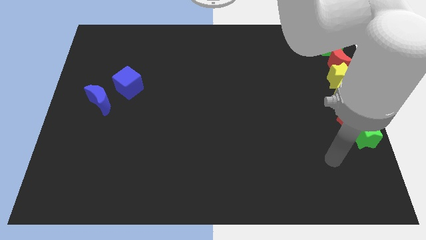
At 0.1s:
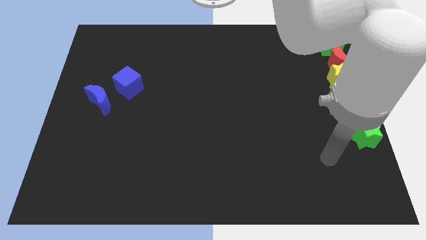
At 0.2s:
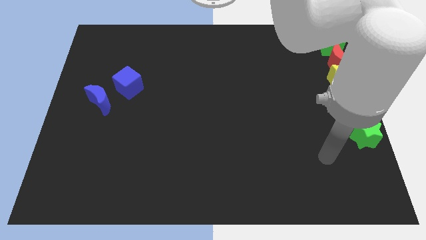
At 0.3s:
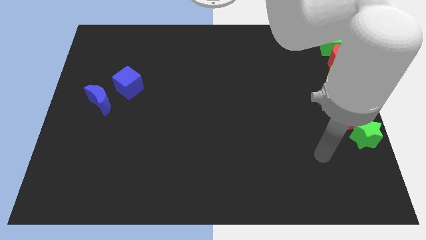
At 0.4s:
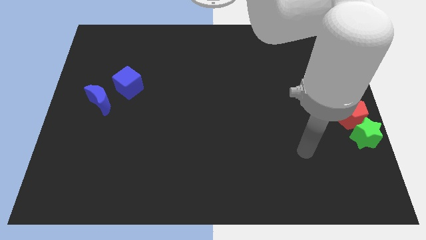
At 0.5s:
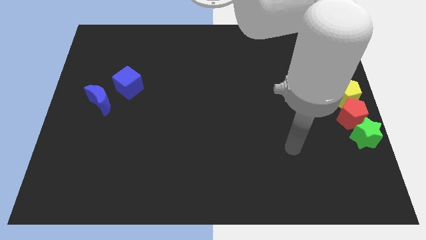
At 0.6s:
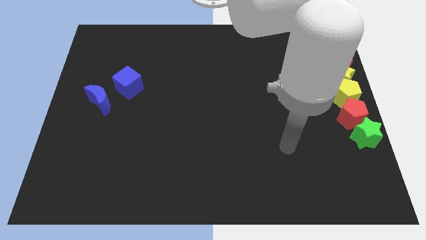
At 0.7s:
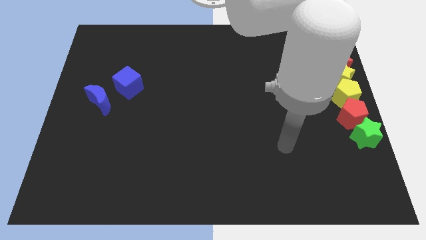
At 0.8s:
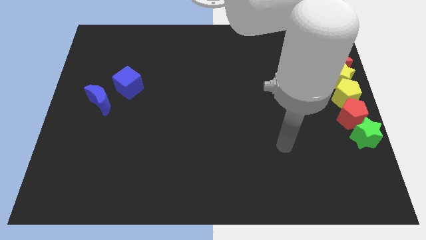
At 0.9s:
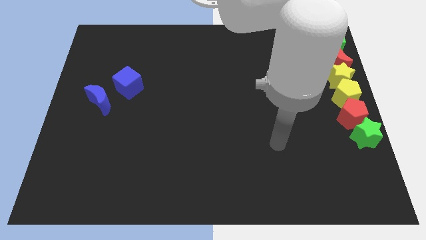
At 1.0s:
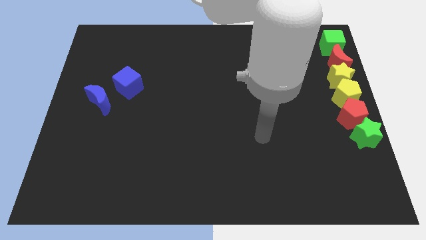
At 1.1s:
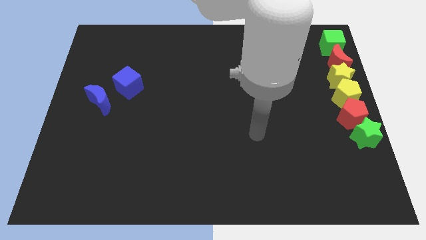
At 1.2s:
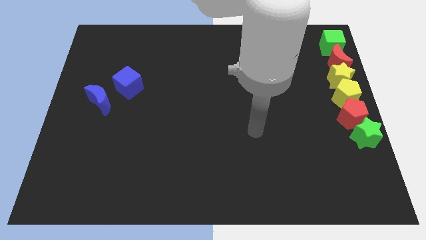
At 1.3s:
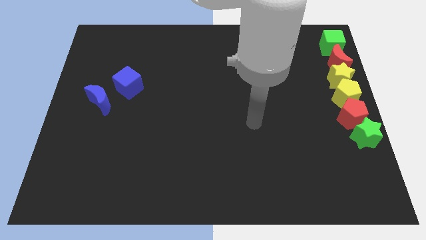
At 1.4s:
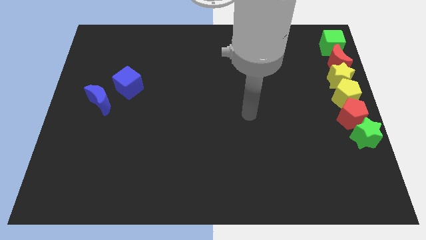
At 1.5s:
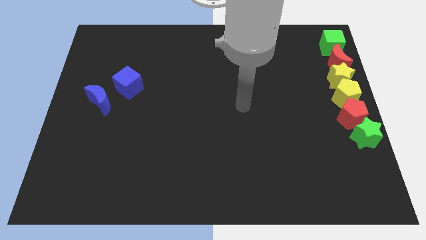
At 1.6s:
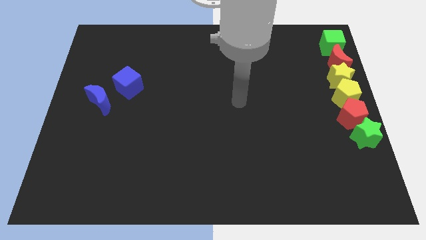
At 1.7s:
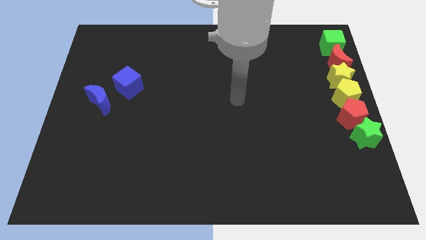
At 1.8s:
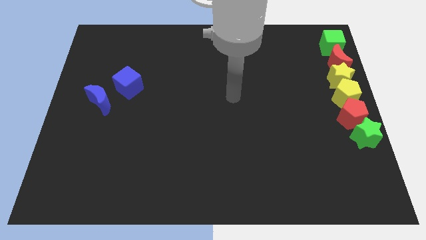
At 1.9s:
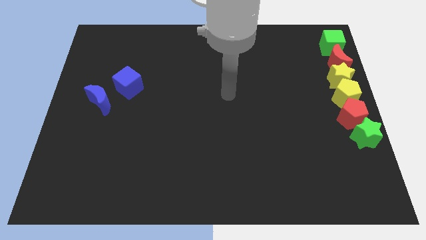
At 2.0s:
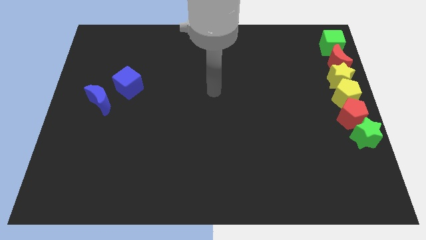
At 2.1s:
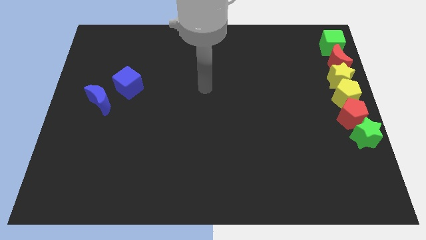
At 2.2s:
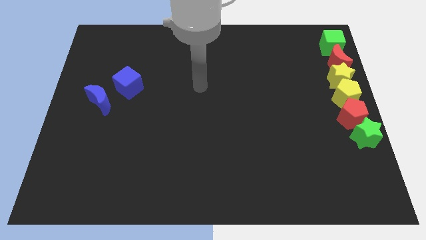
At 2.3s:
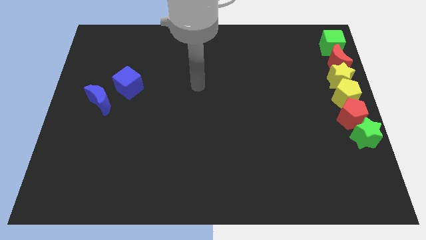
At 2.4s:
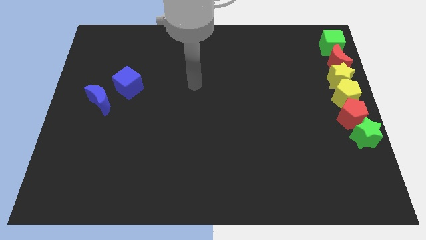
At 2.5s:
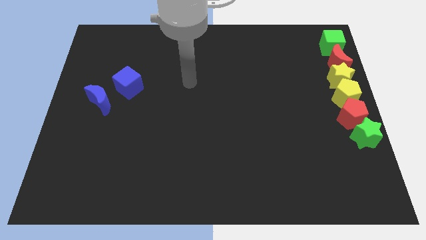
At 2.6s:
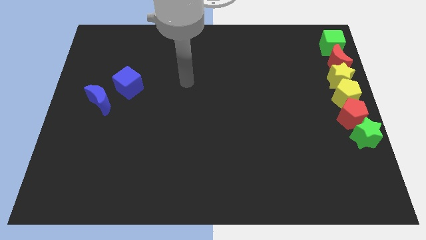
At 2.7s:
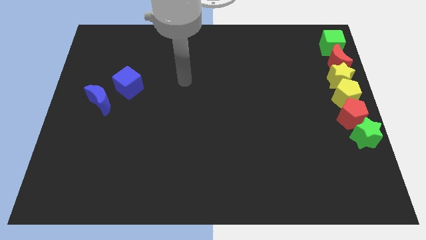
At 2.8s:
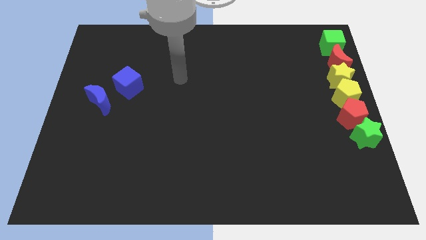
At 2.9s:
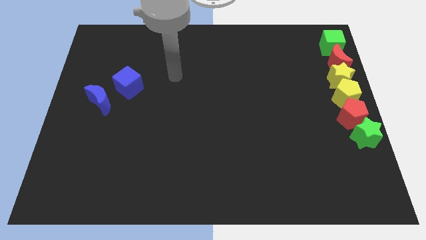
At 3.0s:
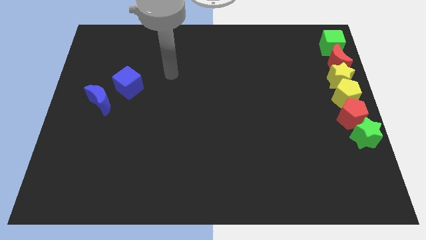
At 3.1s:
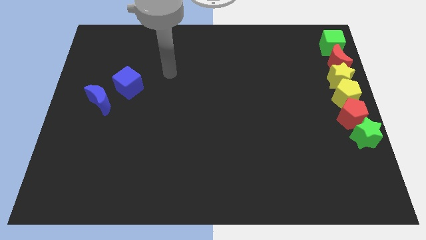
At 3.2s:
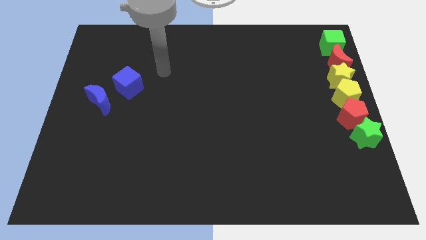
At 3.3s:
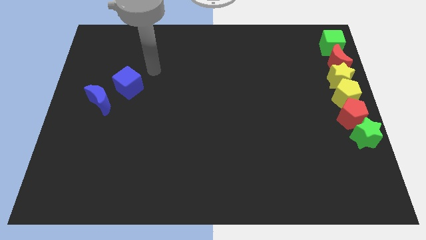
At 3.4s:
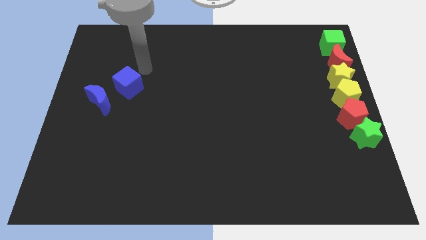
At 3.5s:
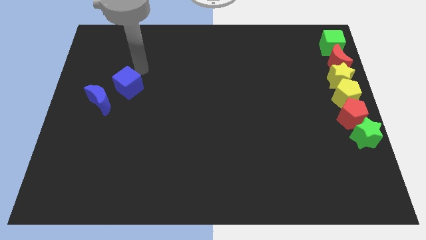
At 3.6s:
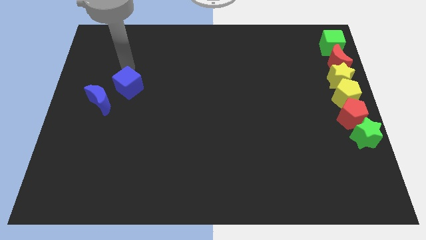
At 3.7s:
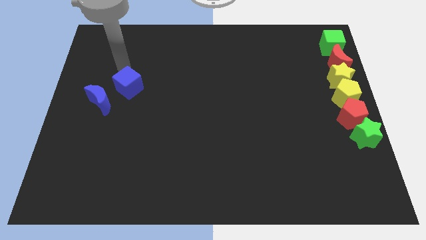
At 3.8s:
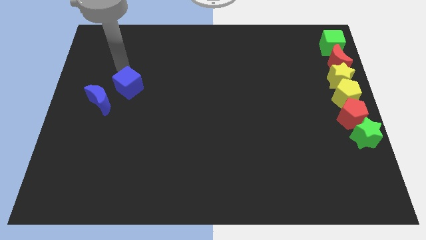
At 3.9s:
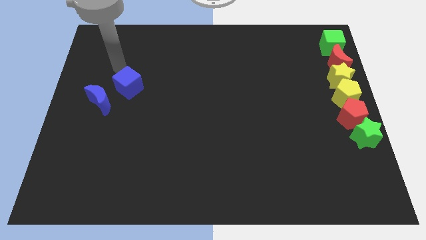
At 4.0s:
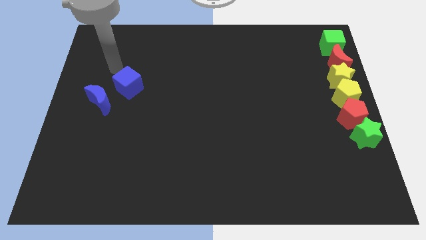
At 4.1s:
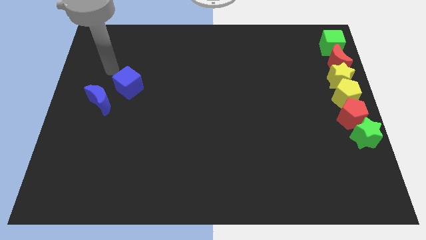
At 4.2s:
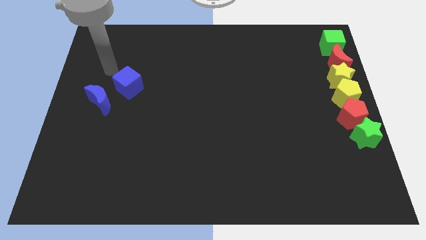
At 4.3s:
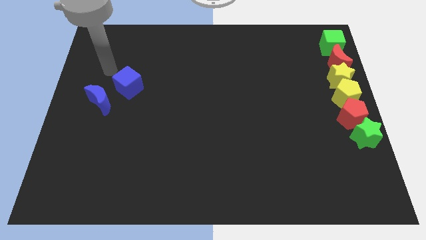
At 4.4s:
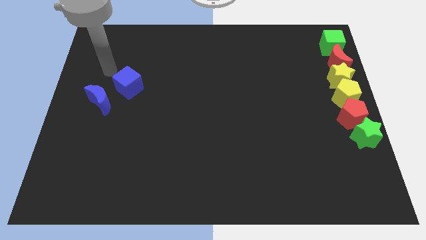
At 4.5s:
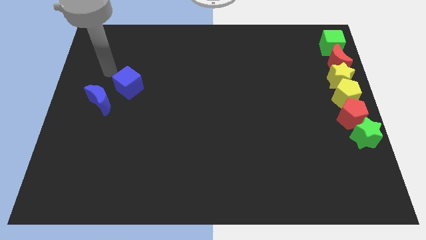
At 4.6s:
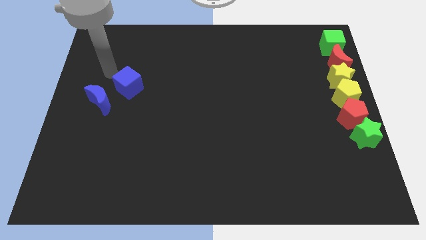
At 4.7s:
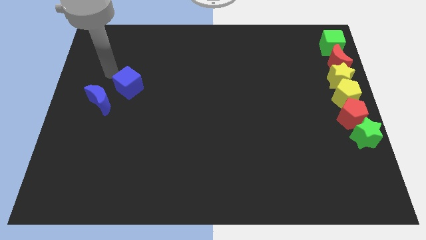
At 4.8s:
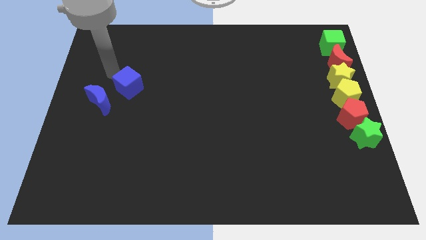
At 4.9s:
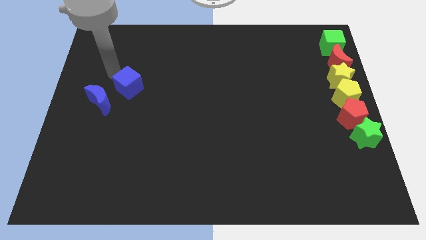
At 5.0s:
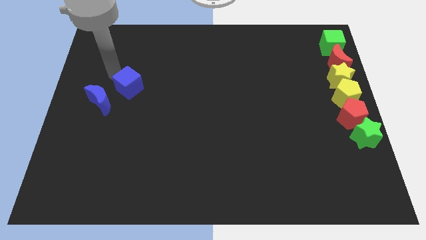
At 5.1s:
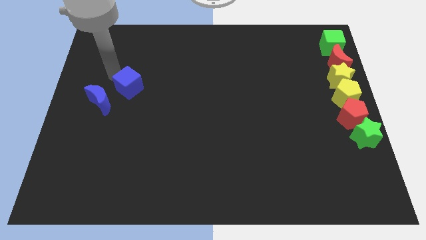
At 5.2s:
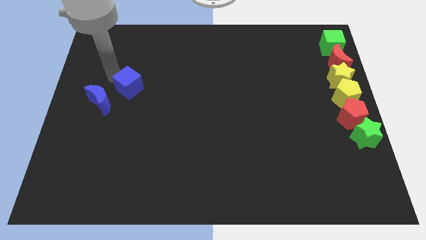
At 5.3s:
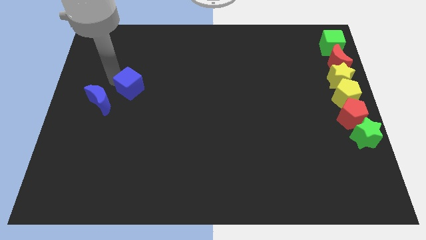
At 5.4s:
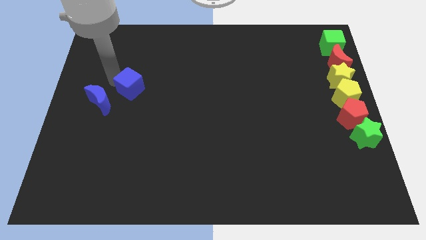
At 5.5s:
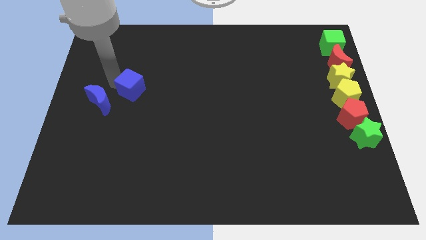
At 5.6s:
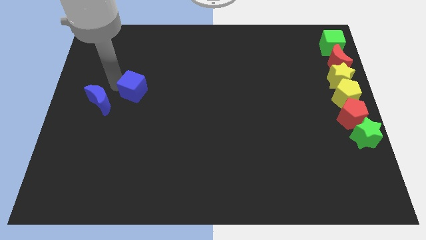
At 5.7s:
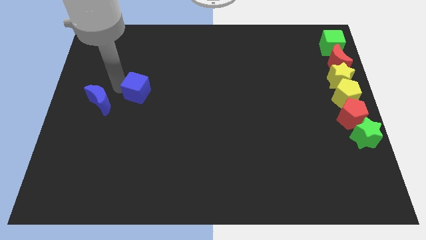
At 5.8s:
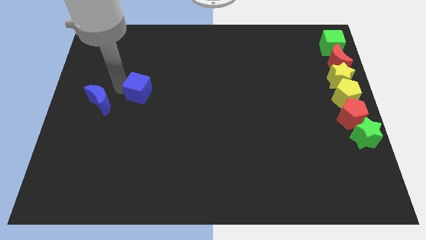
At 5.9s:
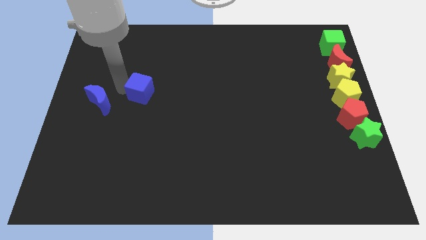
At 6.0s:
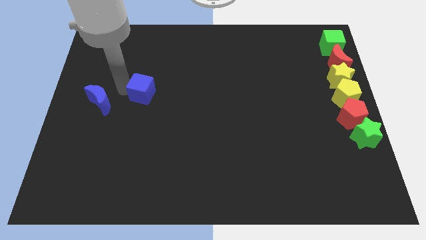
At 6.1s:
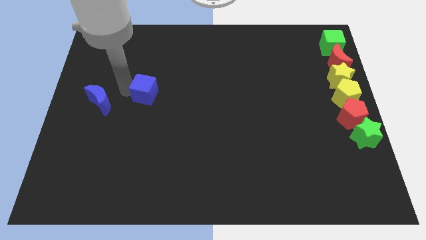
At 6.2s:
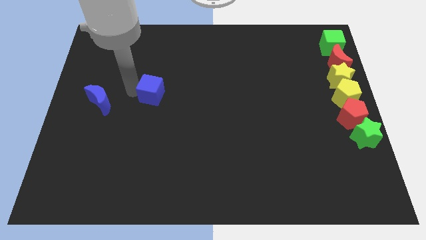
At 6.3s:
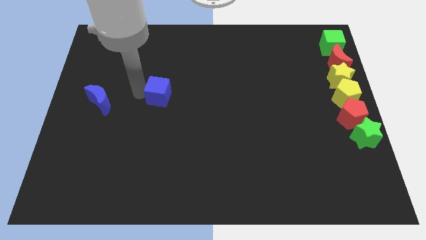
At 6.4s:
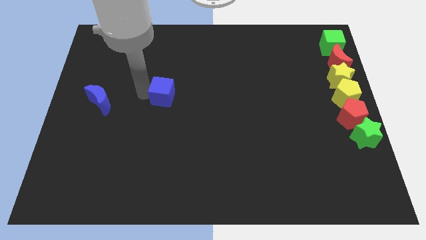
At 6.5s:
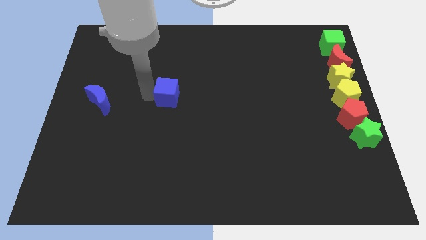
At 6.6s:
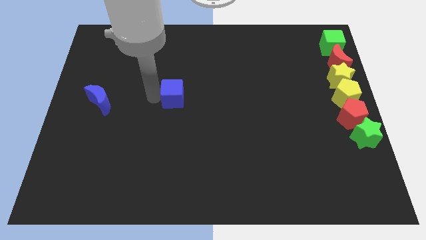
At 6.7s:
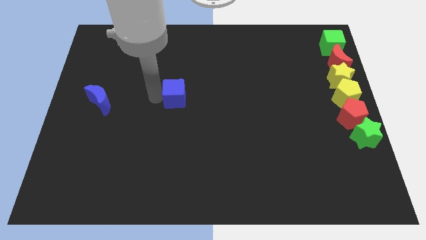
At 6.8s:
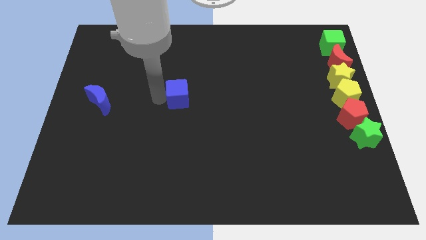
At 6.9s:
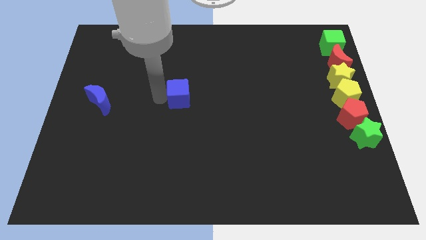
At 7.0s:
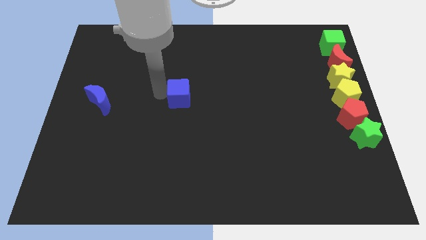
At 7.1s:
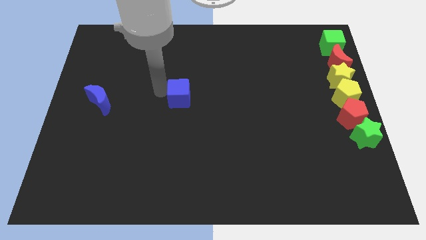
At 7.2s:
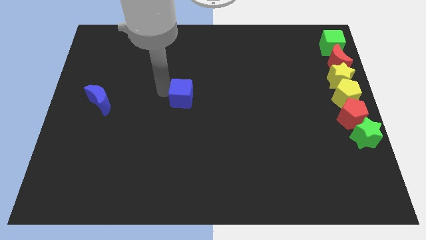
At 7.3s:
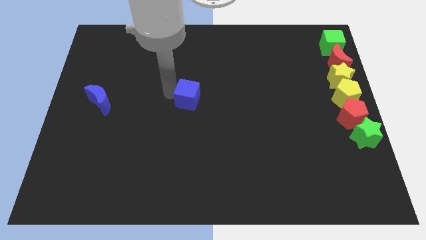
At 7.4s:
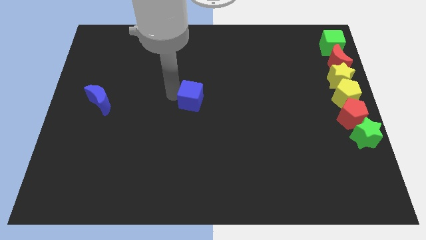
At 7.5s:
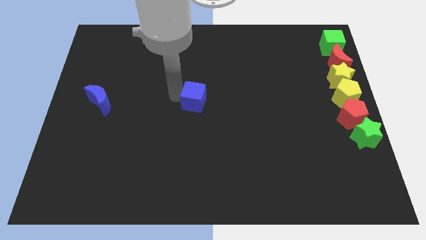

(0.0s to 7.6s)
push the blue cube to the center of the board

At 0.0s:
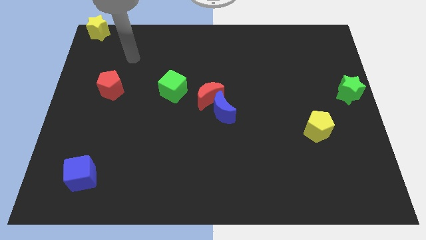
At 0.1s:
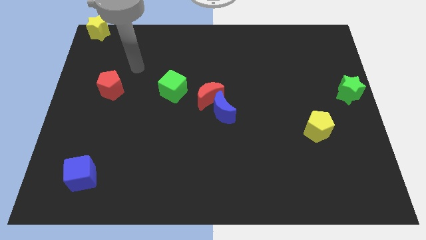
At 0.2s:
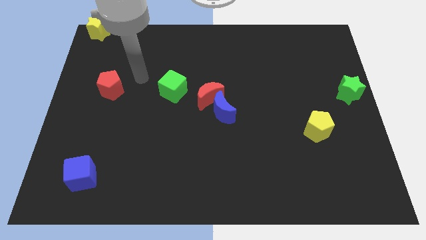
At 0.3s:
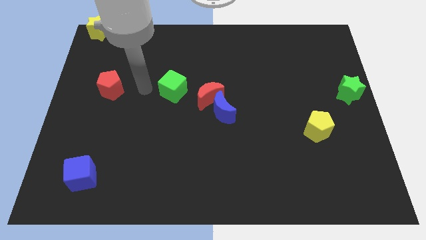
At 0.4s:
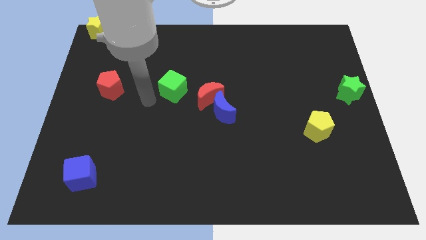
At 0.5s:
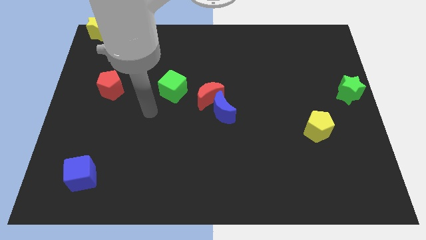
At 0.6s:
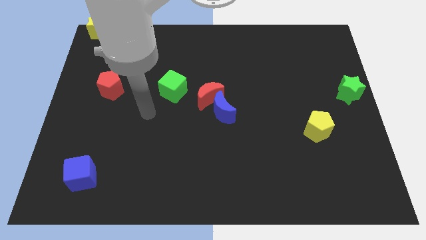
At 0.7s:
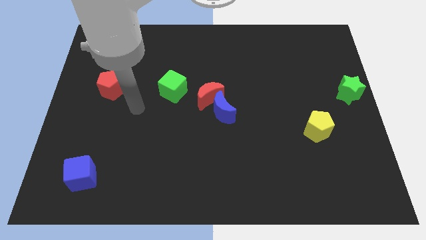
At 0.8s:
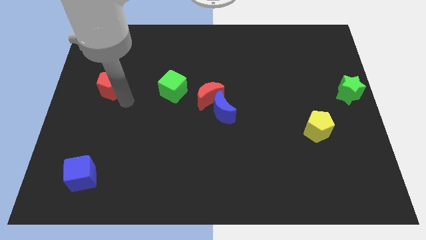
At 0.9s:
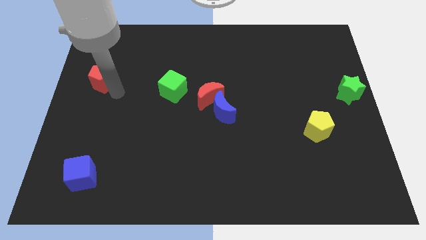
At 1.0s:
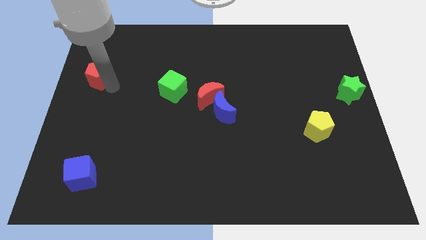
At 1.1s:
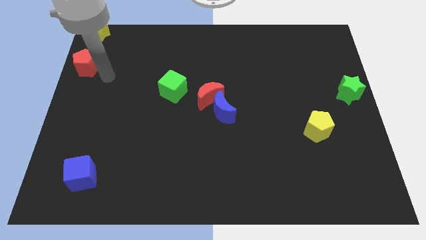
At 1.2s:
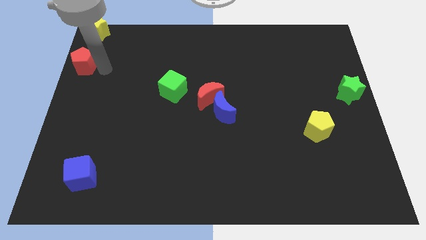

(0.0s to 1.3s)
push the red pentagon to the bottom side of the yellow star
